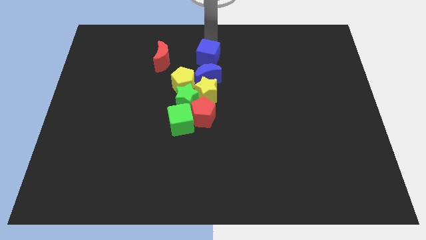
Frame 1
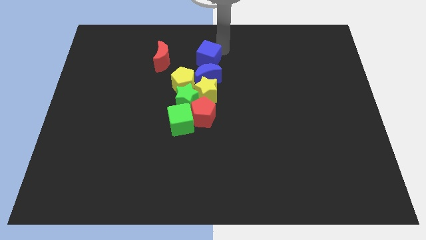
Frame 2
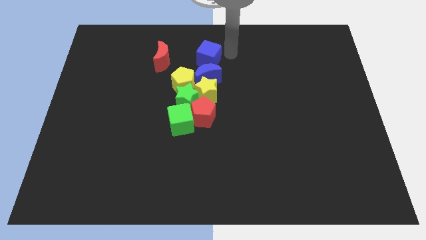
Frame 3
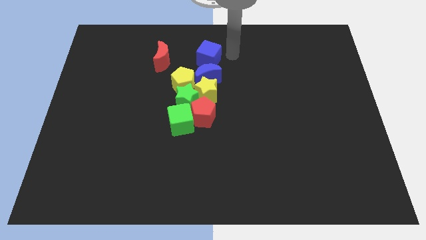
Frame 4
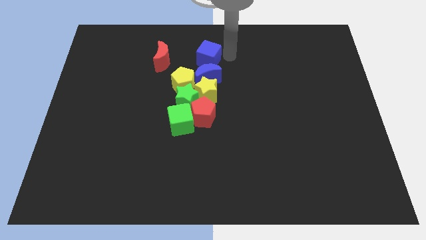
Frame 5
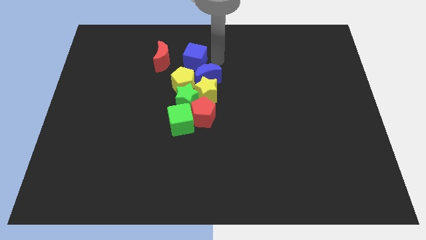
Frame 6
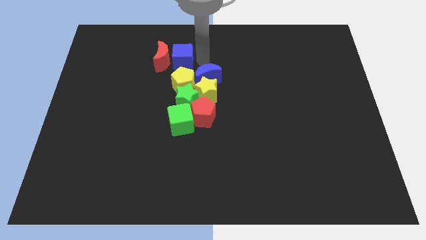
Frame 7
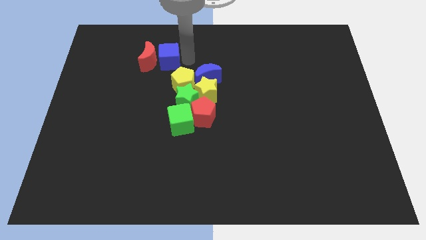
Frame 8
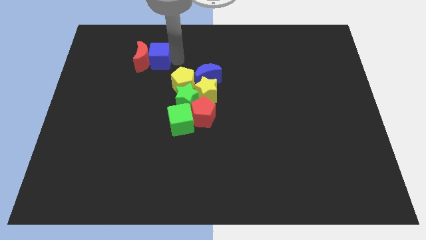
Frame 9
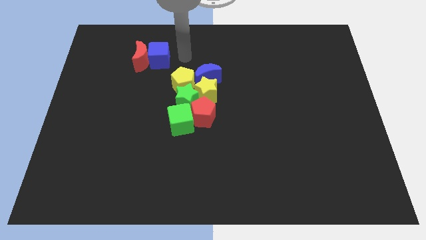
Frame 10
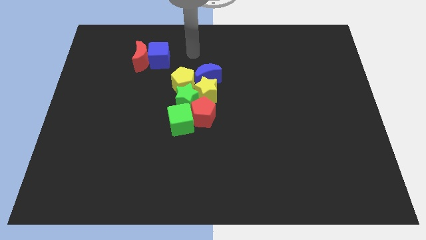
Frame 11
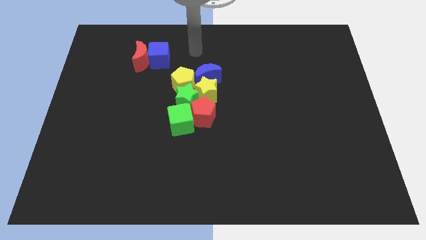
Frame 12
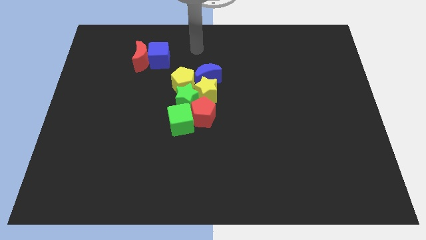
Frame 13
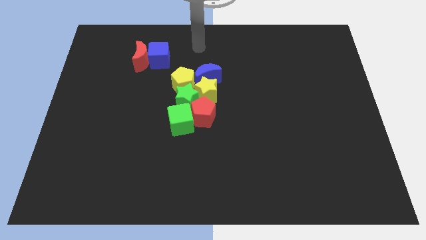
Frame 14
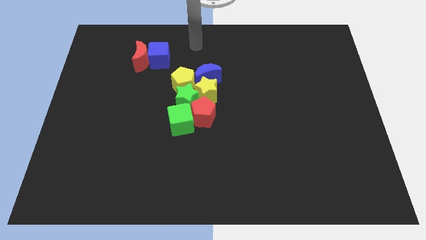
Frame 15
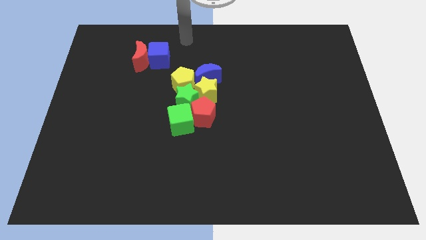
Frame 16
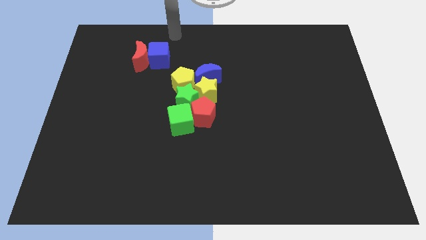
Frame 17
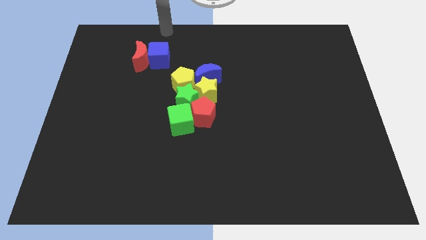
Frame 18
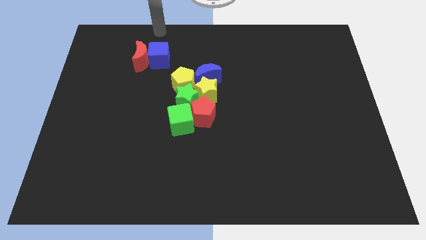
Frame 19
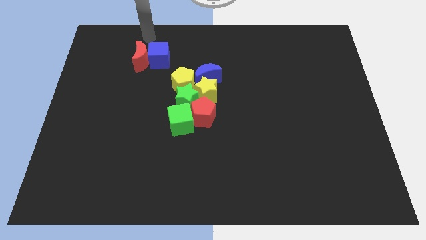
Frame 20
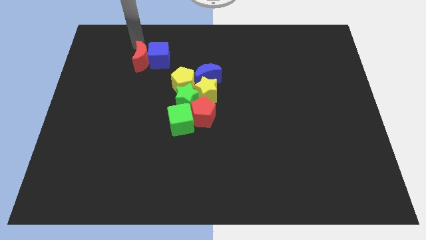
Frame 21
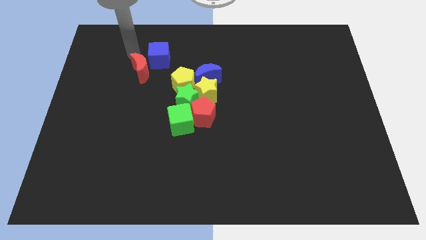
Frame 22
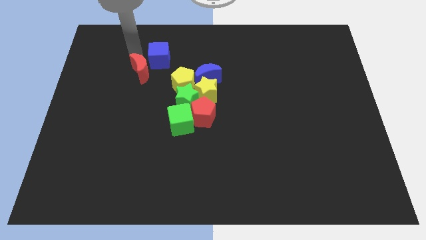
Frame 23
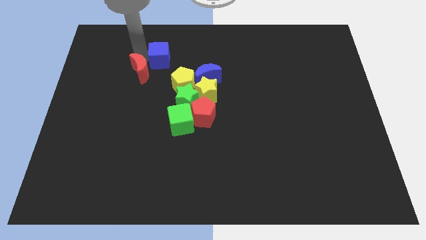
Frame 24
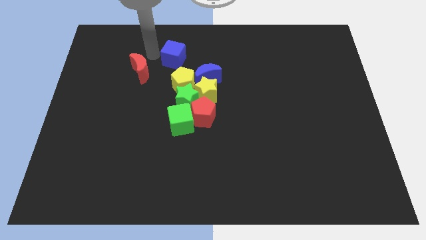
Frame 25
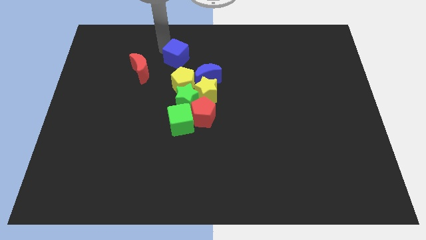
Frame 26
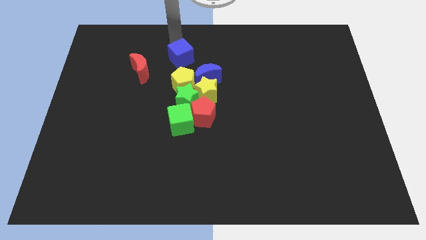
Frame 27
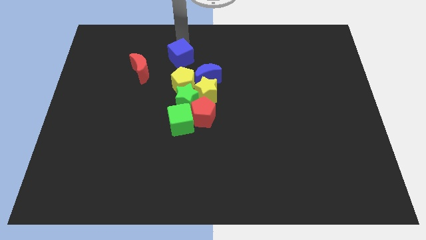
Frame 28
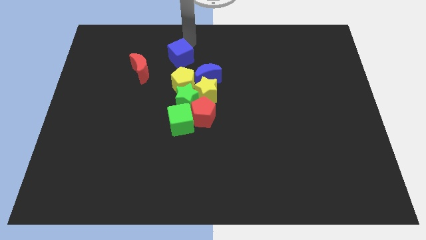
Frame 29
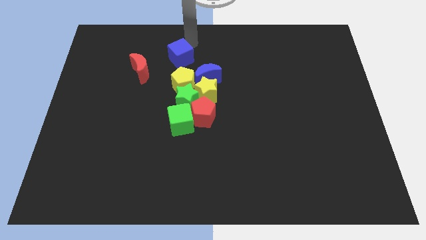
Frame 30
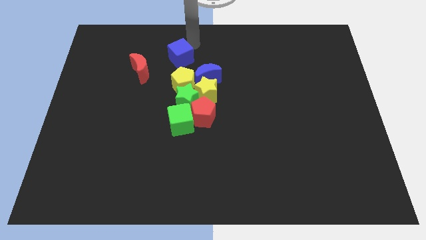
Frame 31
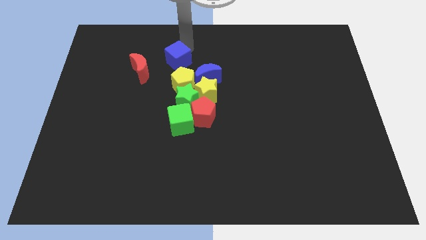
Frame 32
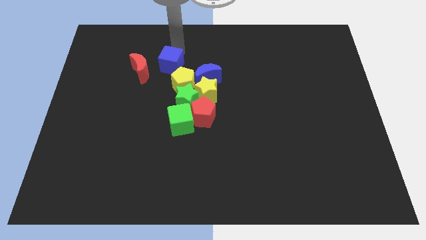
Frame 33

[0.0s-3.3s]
place blue cube to the top left of yellow pentagon

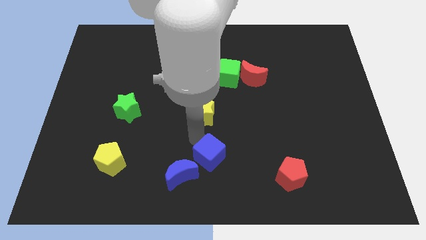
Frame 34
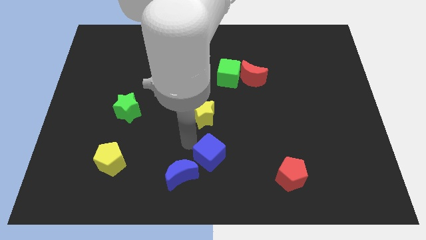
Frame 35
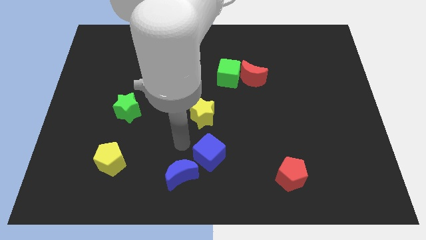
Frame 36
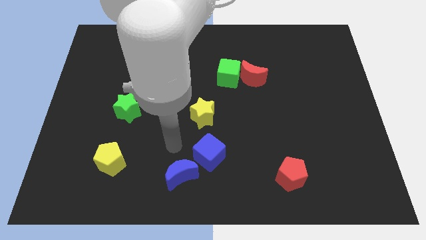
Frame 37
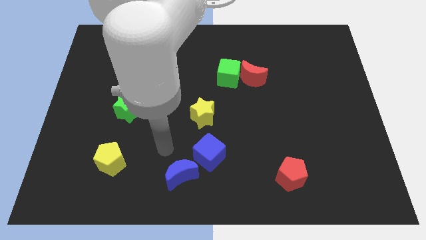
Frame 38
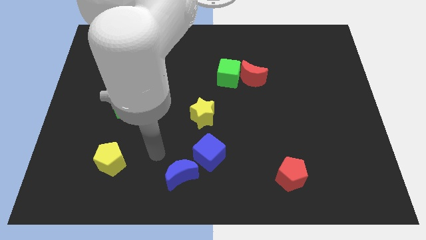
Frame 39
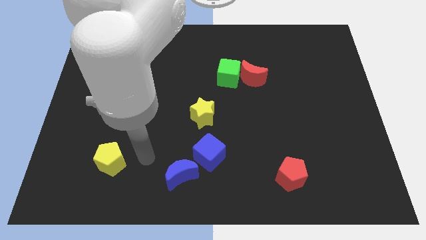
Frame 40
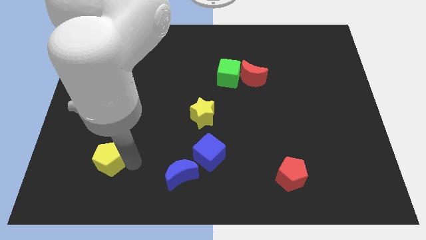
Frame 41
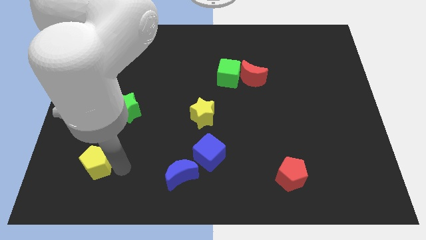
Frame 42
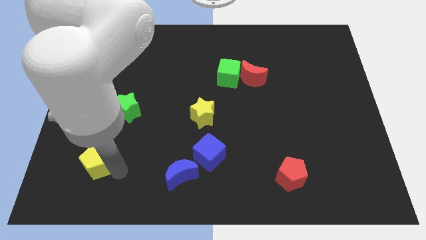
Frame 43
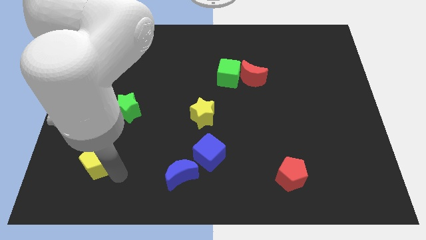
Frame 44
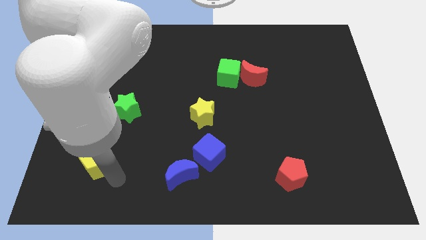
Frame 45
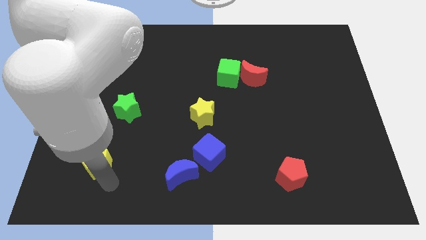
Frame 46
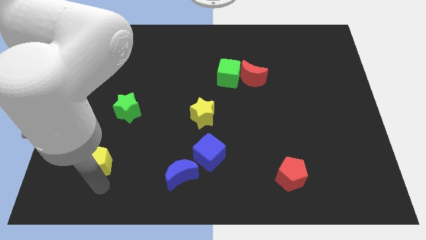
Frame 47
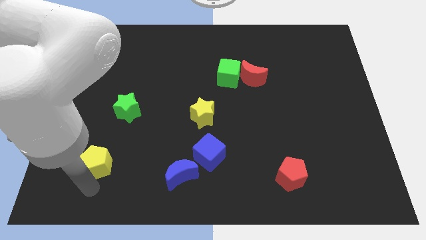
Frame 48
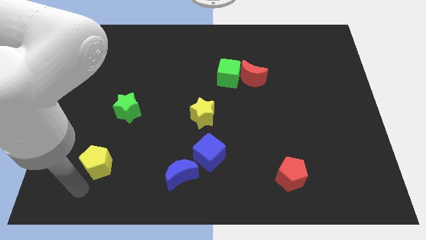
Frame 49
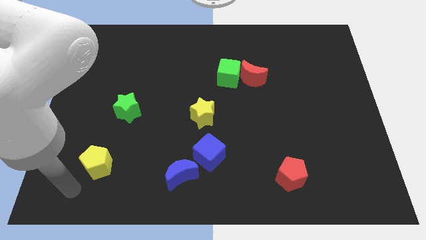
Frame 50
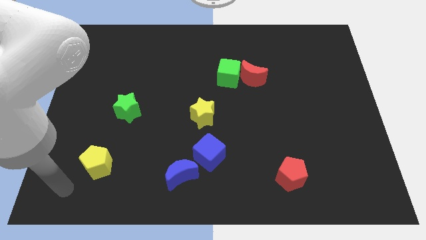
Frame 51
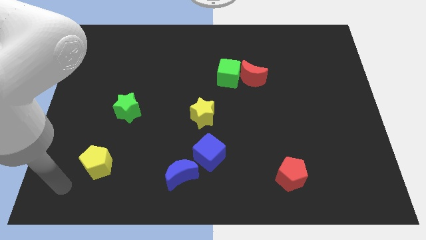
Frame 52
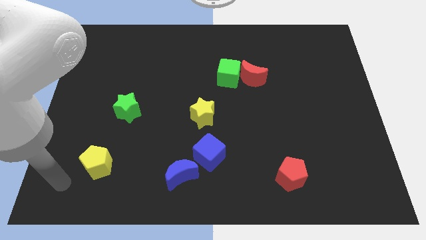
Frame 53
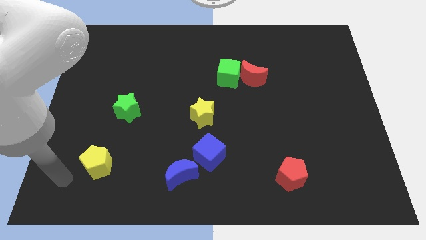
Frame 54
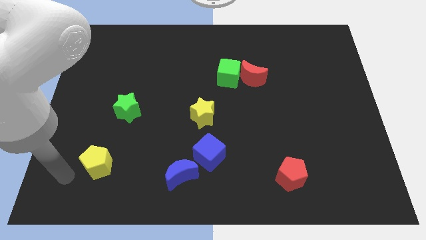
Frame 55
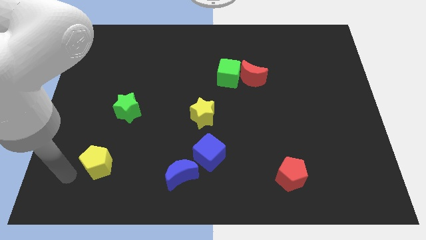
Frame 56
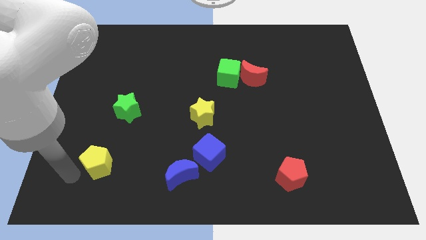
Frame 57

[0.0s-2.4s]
move the pointer towards the bottom left corner of the board

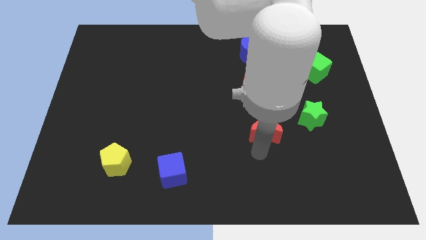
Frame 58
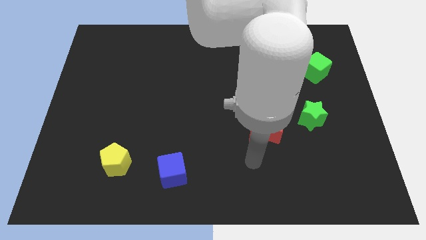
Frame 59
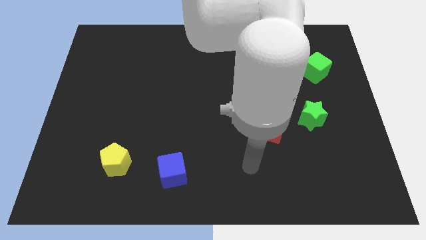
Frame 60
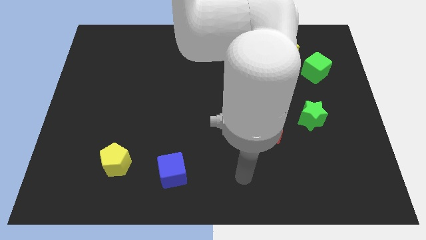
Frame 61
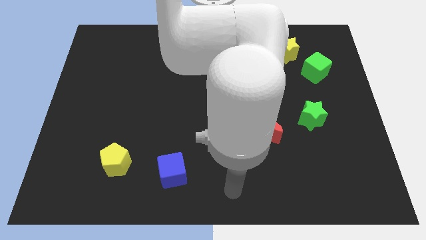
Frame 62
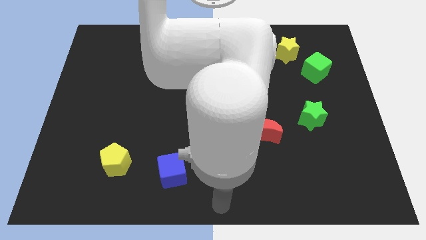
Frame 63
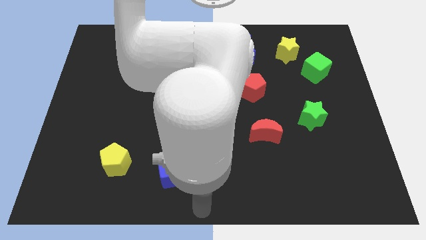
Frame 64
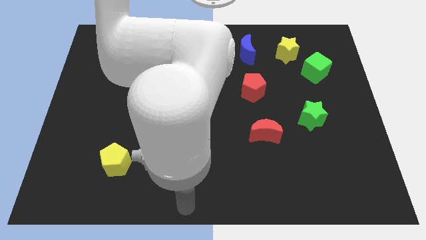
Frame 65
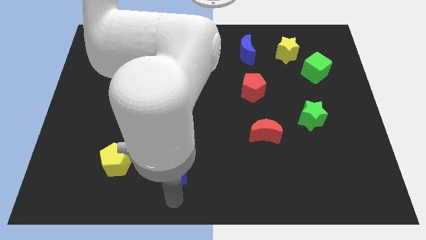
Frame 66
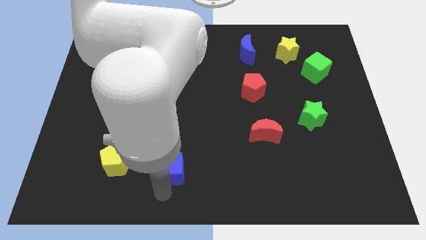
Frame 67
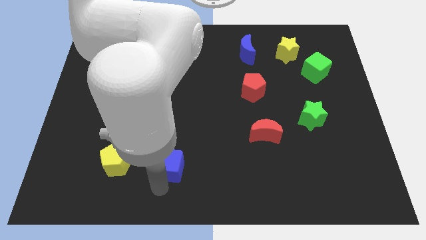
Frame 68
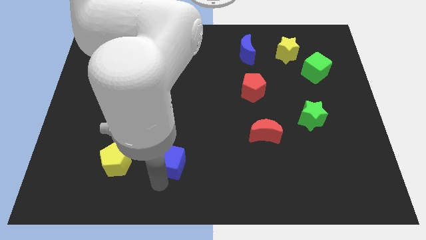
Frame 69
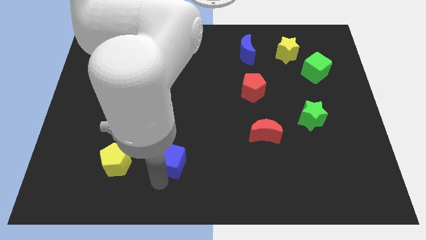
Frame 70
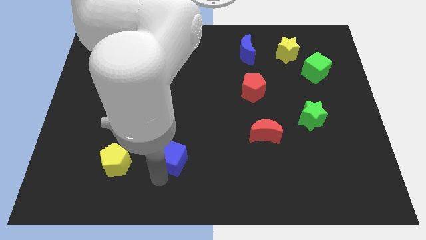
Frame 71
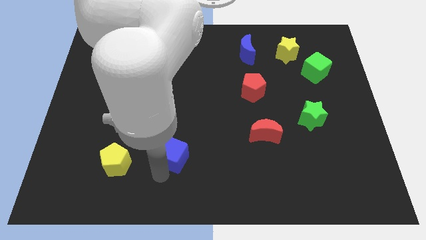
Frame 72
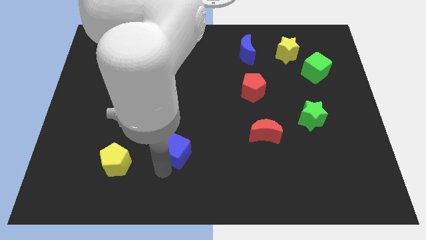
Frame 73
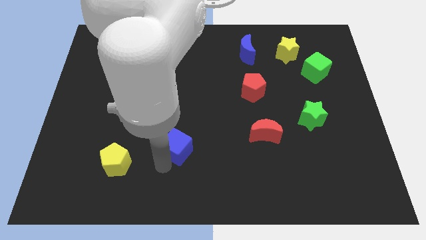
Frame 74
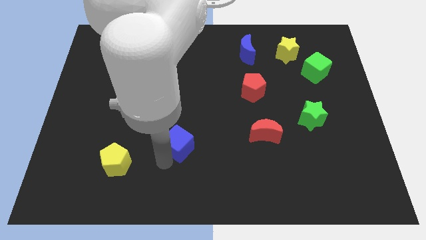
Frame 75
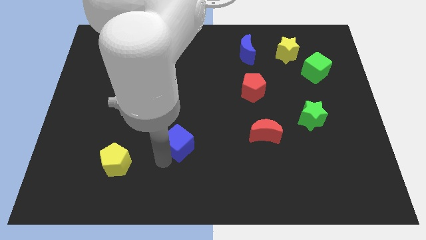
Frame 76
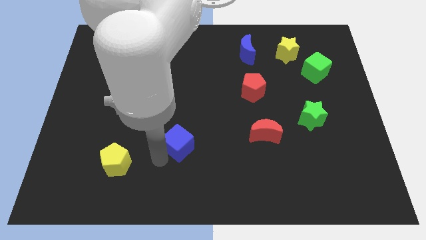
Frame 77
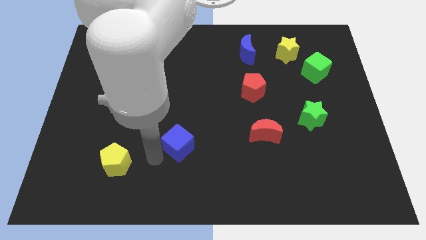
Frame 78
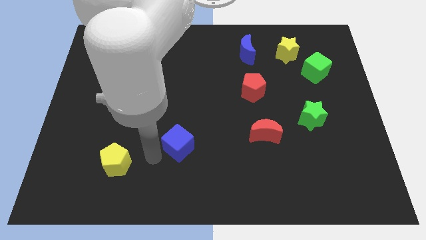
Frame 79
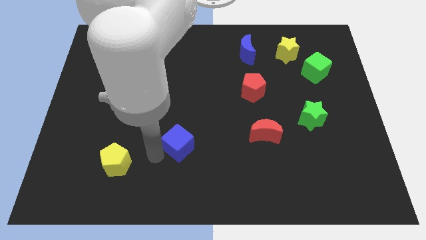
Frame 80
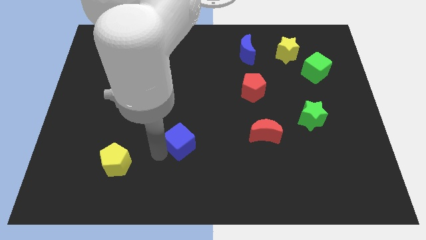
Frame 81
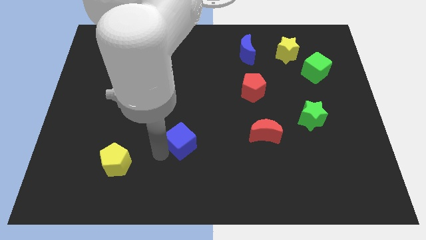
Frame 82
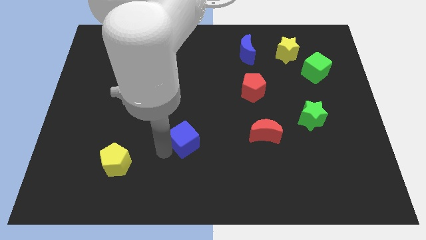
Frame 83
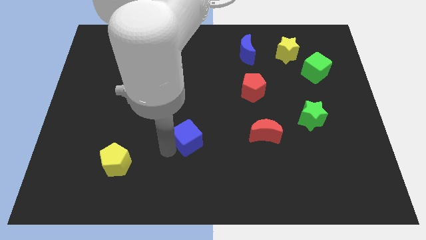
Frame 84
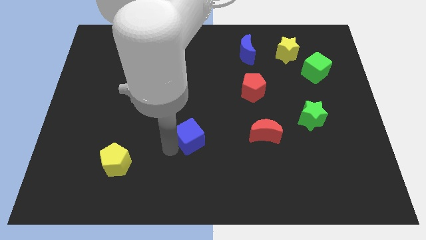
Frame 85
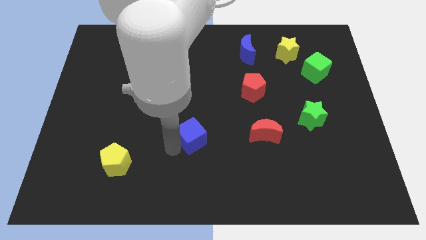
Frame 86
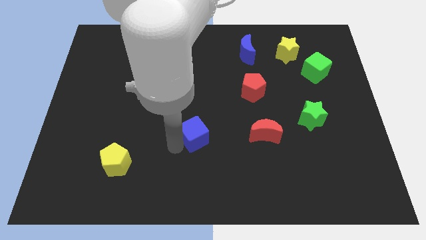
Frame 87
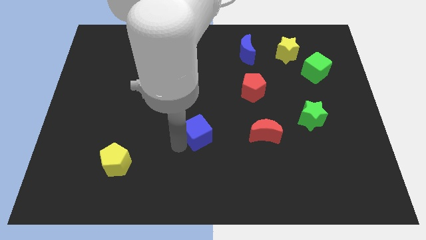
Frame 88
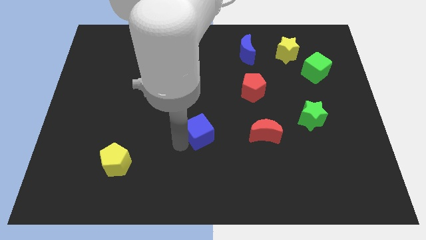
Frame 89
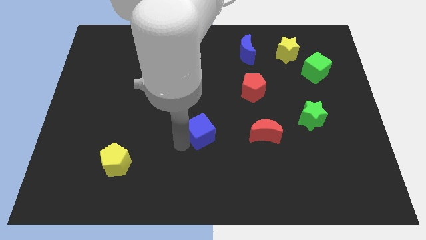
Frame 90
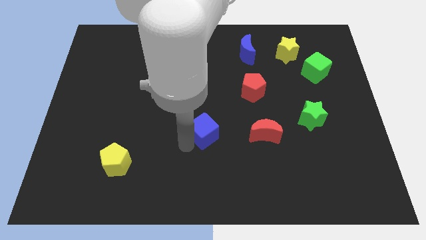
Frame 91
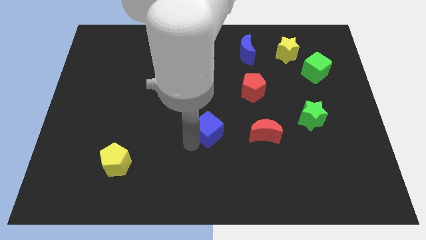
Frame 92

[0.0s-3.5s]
move the blue cube parallel left to the red moon
